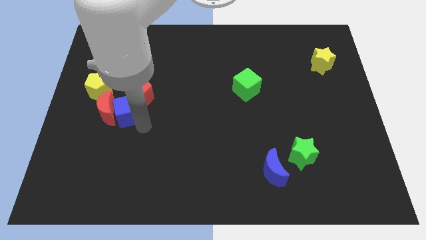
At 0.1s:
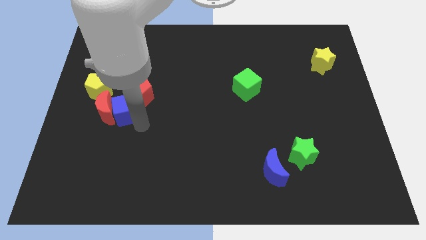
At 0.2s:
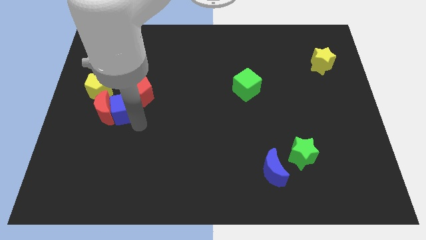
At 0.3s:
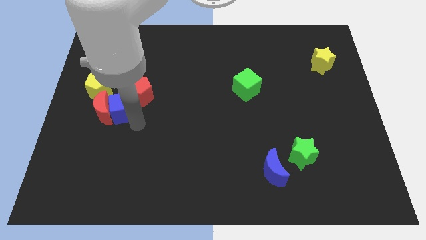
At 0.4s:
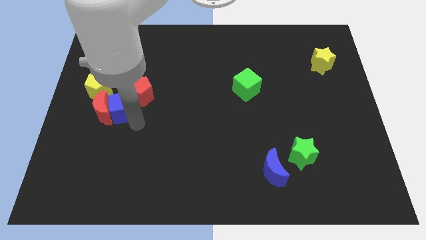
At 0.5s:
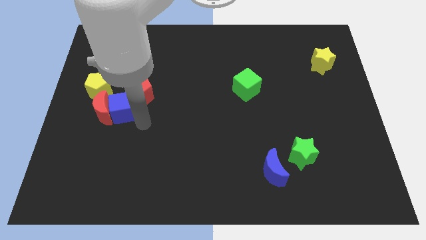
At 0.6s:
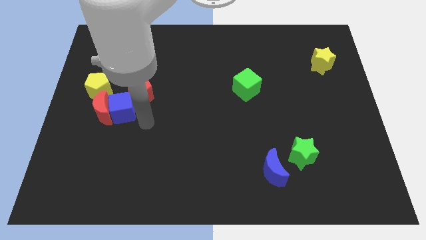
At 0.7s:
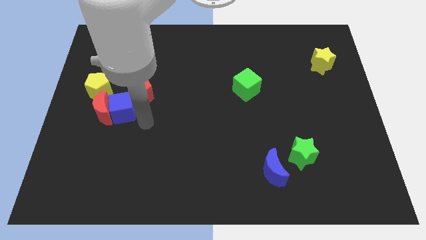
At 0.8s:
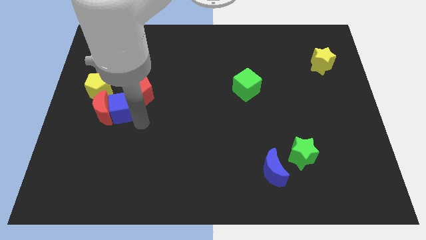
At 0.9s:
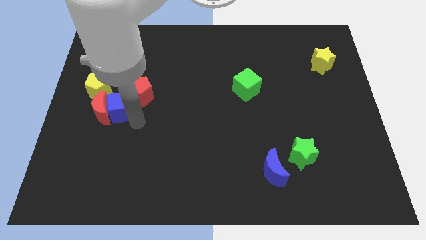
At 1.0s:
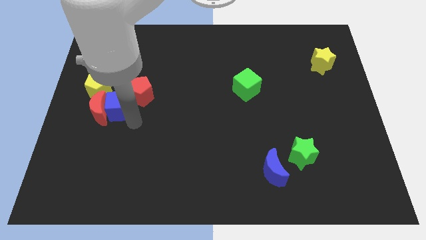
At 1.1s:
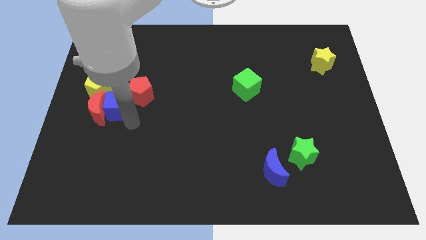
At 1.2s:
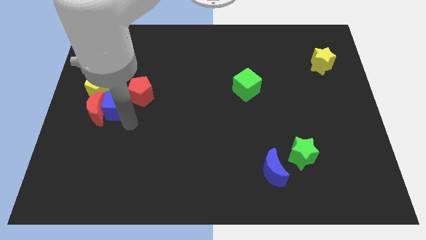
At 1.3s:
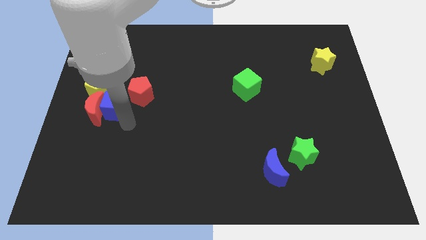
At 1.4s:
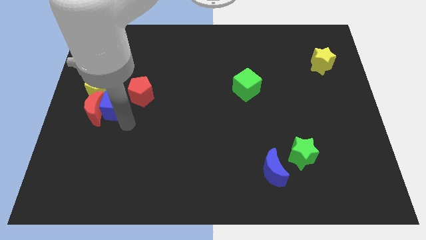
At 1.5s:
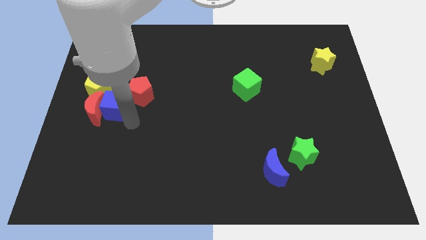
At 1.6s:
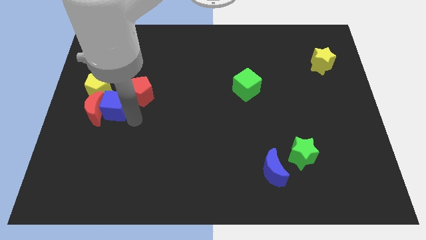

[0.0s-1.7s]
push the red crescent towards the bottom to the yellow pentagon with blue cube

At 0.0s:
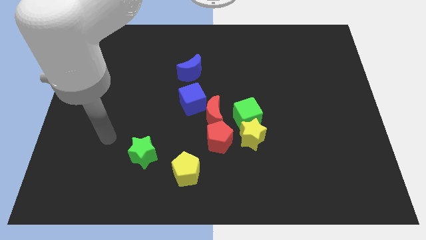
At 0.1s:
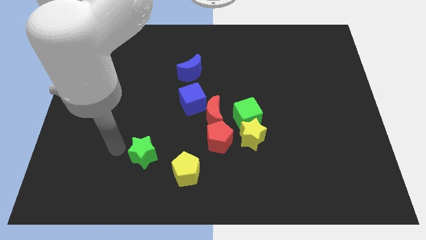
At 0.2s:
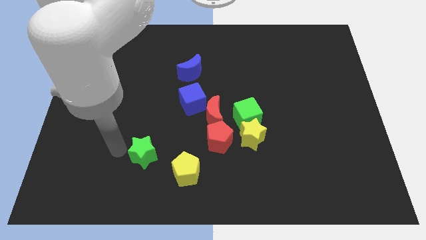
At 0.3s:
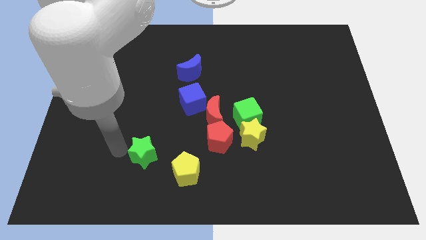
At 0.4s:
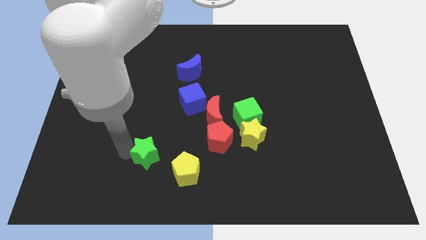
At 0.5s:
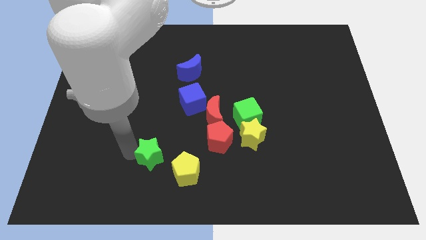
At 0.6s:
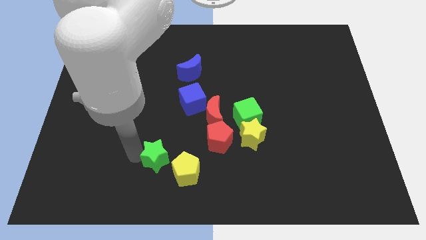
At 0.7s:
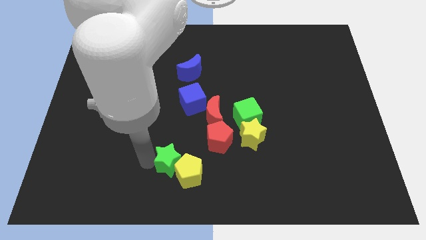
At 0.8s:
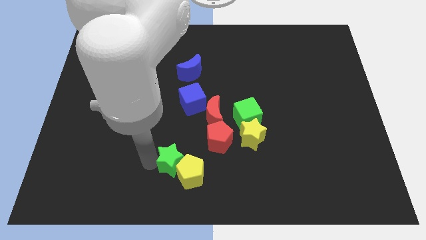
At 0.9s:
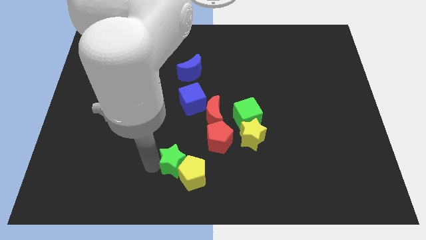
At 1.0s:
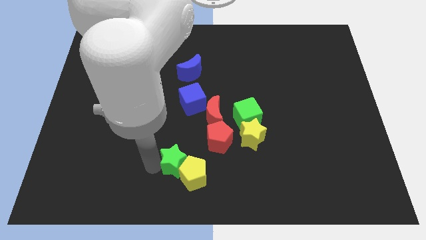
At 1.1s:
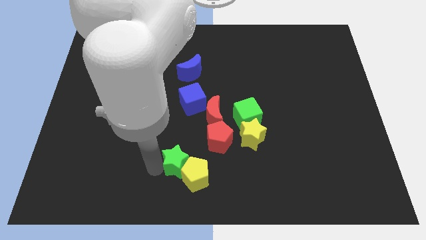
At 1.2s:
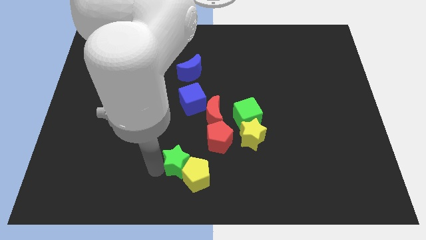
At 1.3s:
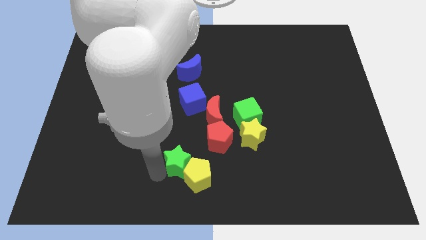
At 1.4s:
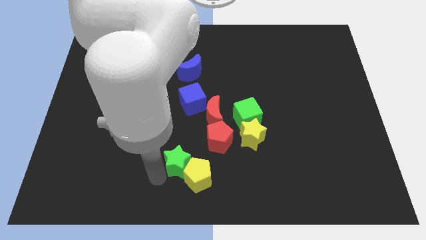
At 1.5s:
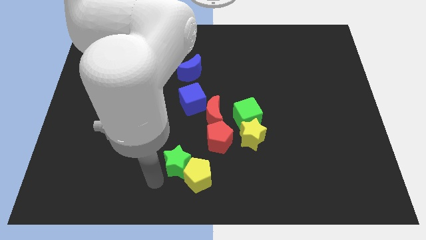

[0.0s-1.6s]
move the green star into the yellow pentagon

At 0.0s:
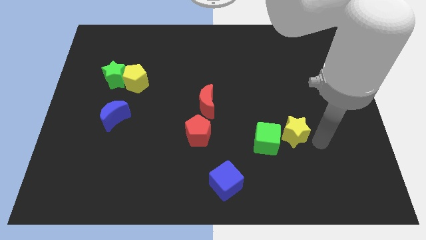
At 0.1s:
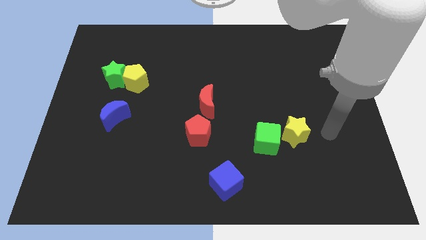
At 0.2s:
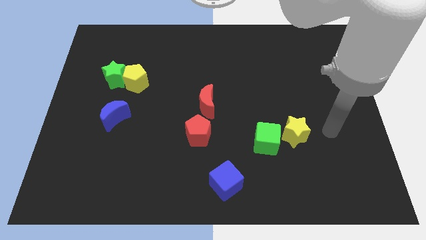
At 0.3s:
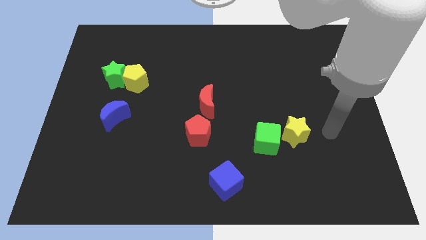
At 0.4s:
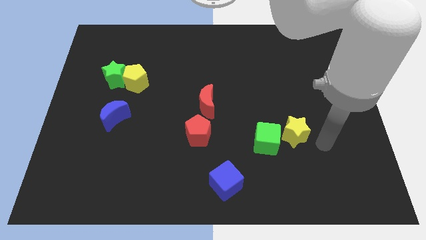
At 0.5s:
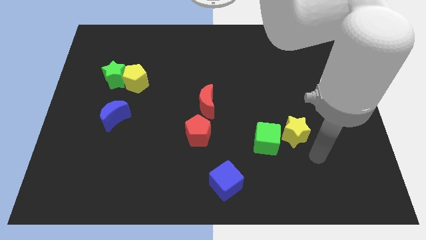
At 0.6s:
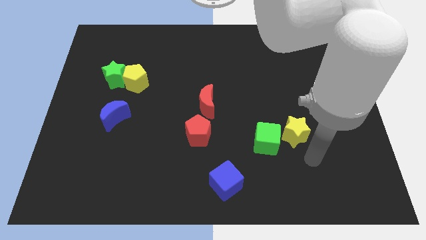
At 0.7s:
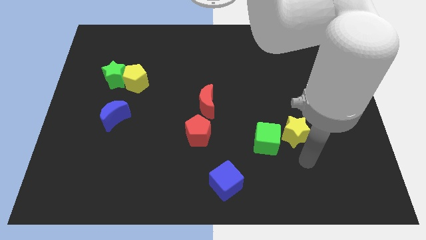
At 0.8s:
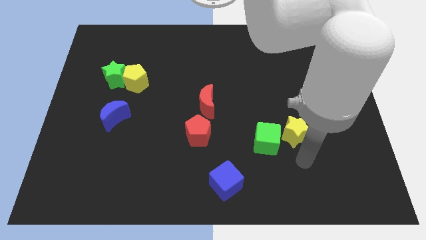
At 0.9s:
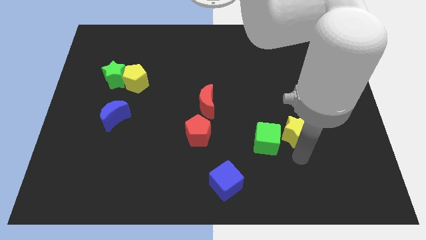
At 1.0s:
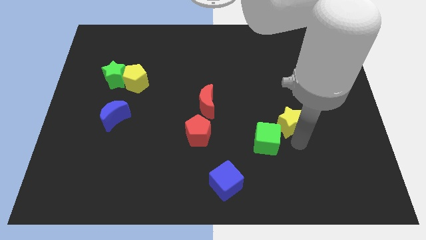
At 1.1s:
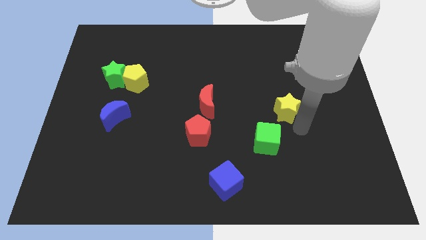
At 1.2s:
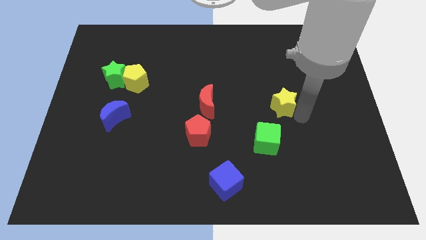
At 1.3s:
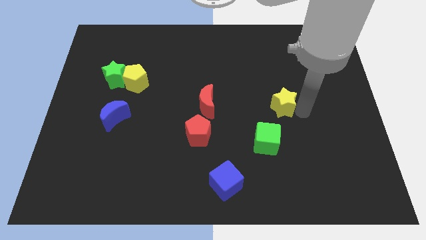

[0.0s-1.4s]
push the yellow star horizontally parallel to the red crescent

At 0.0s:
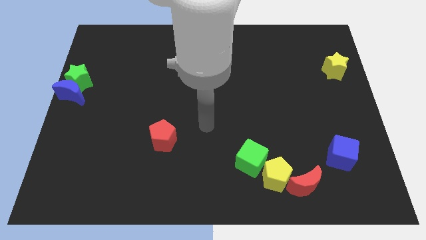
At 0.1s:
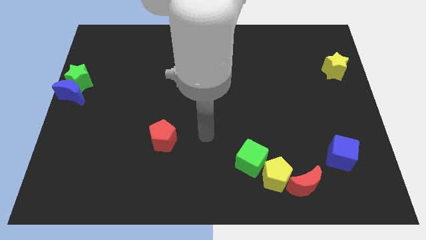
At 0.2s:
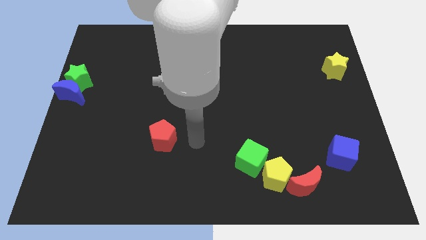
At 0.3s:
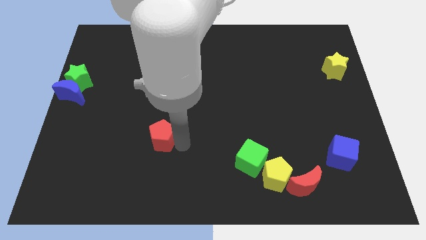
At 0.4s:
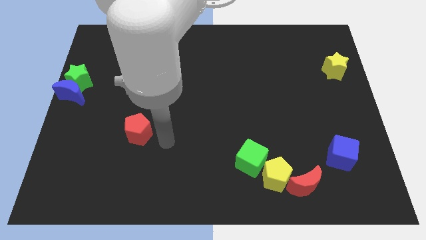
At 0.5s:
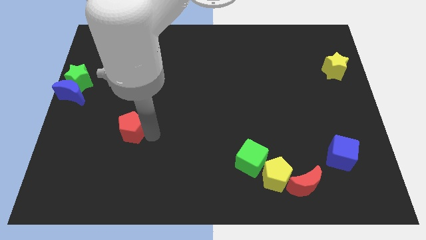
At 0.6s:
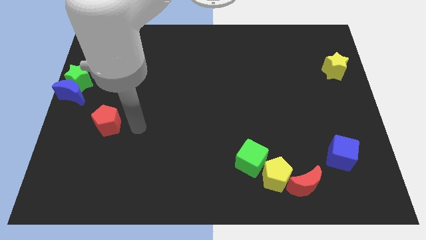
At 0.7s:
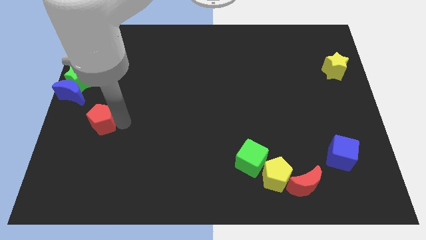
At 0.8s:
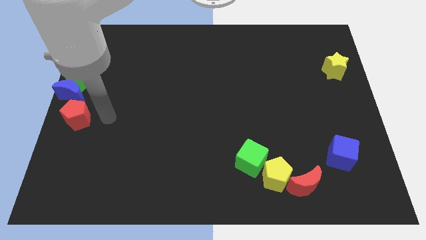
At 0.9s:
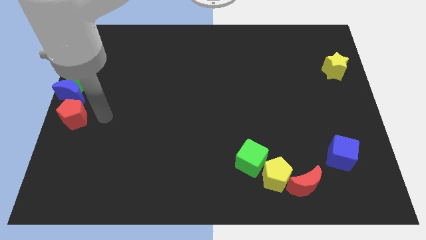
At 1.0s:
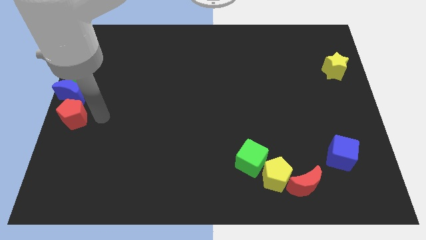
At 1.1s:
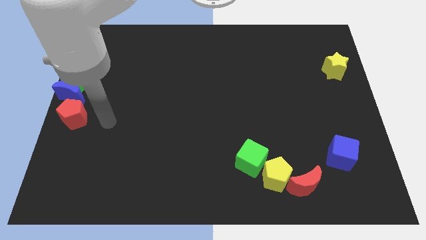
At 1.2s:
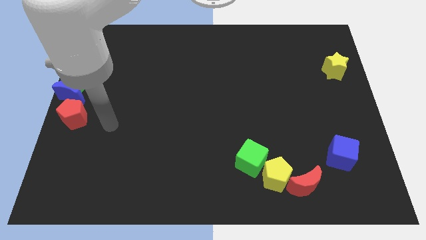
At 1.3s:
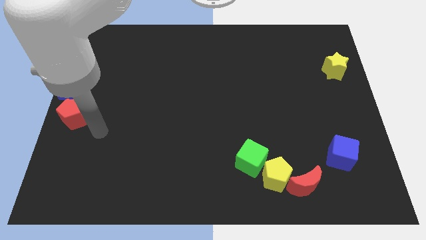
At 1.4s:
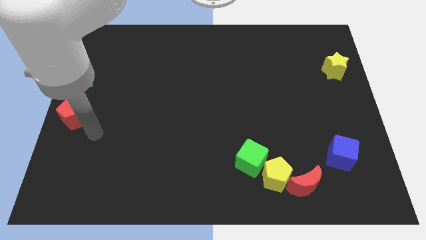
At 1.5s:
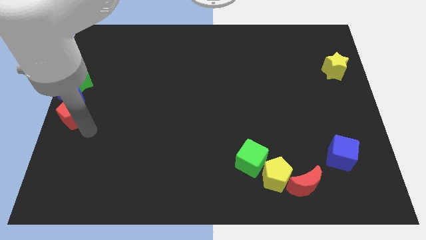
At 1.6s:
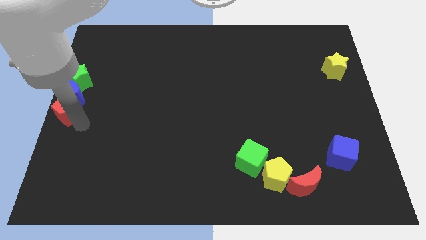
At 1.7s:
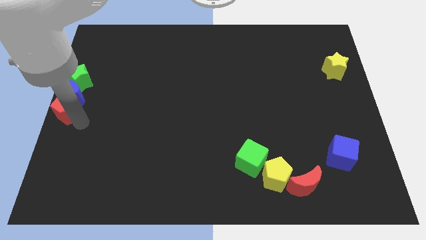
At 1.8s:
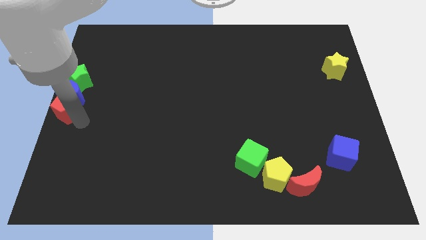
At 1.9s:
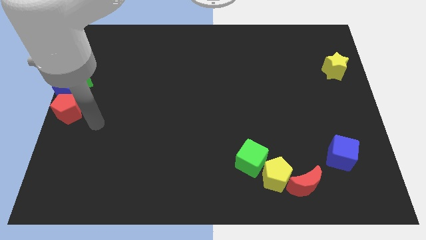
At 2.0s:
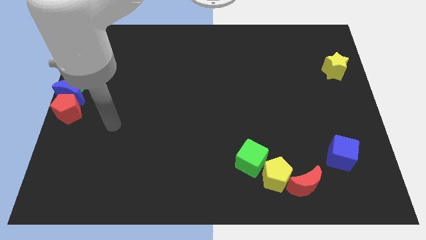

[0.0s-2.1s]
drag the red pentagon to center left of the board

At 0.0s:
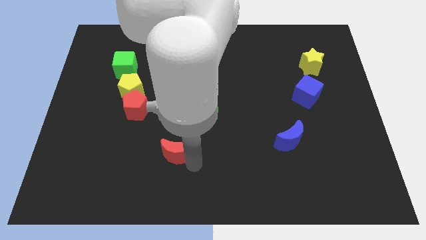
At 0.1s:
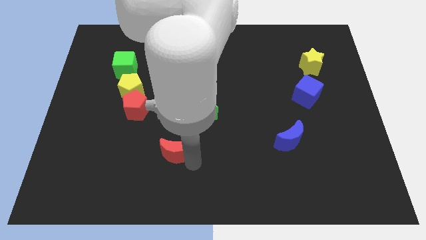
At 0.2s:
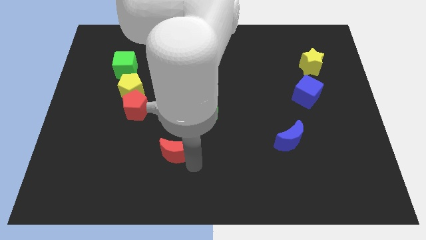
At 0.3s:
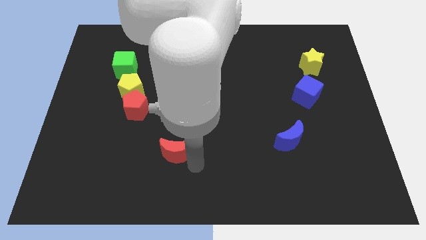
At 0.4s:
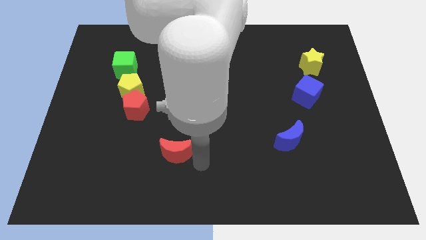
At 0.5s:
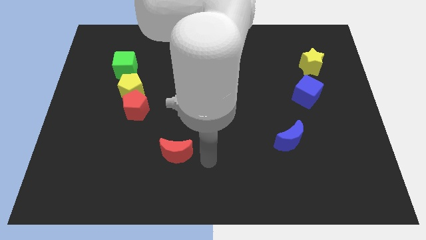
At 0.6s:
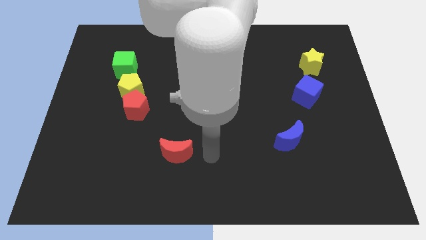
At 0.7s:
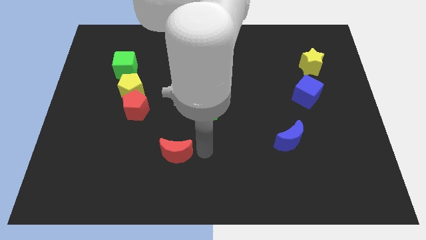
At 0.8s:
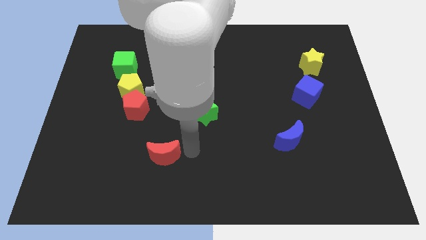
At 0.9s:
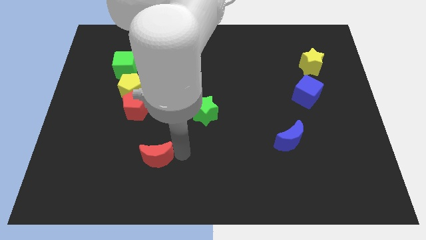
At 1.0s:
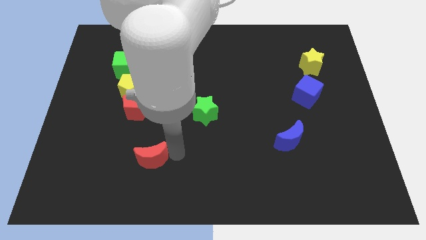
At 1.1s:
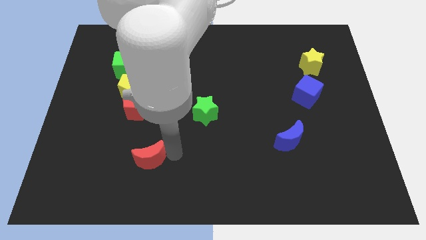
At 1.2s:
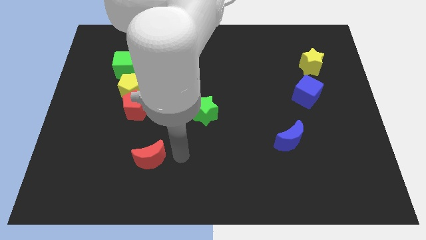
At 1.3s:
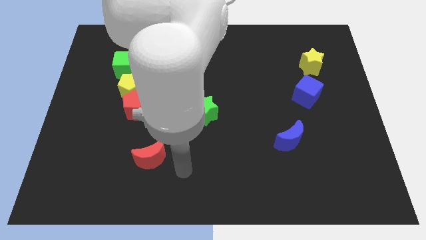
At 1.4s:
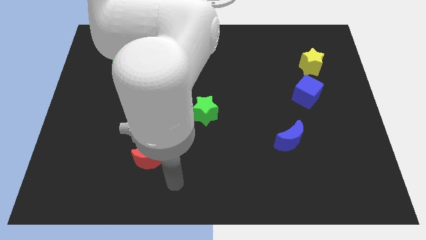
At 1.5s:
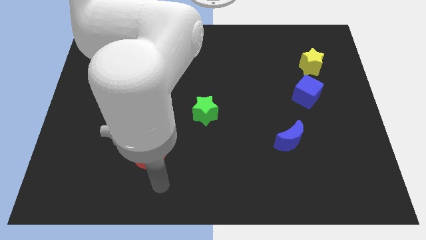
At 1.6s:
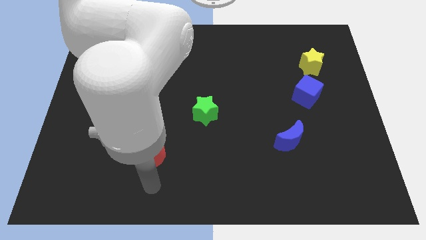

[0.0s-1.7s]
push red crescent below red pentagon

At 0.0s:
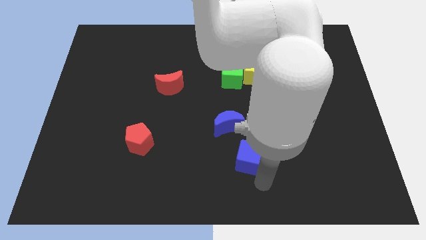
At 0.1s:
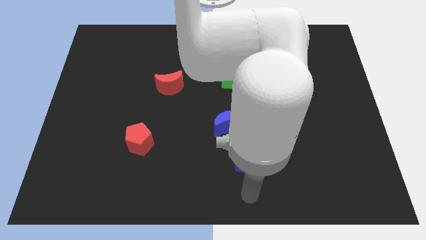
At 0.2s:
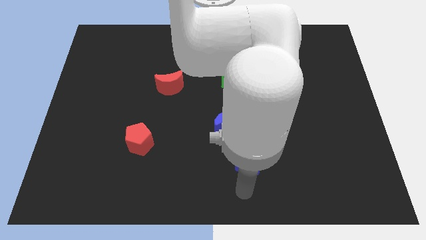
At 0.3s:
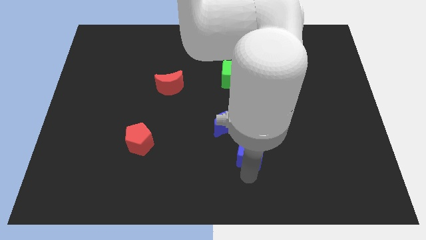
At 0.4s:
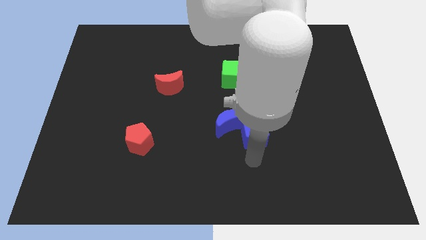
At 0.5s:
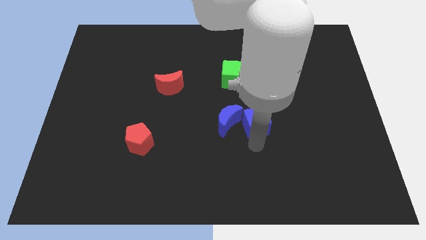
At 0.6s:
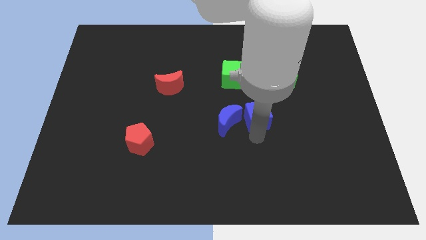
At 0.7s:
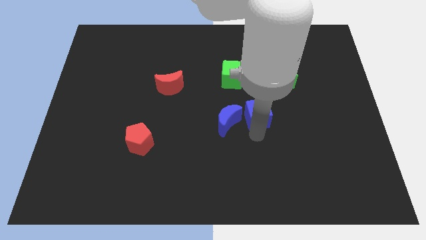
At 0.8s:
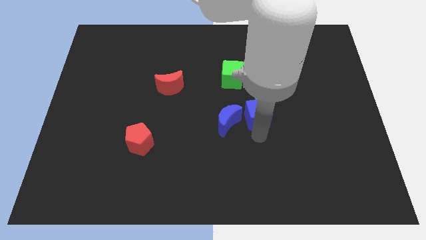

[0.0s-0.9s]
place blue cube below yellow pentagon
